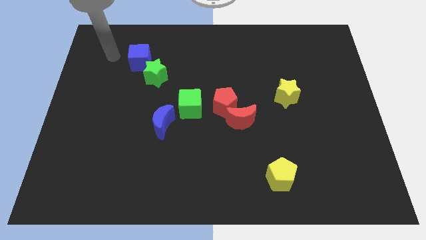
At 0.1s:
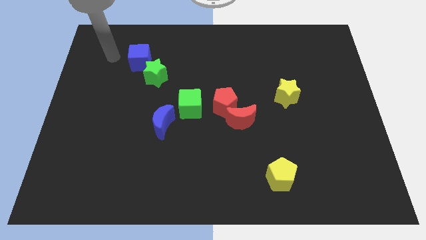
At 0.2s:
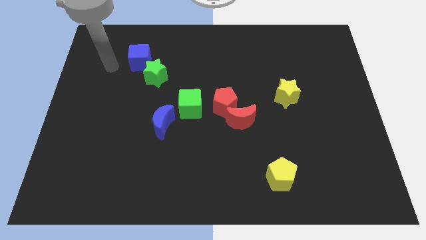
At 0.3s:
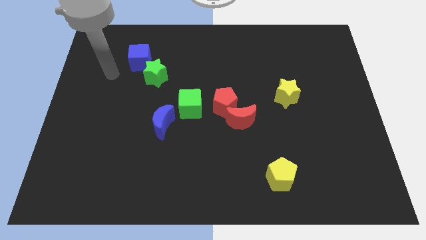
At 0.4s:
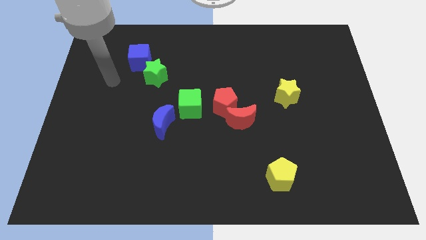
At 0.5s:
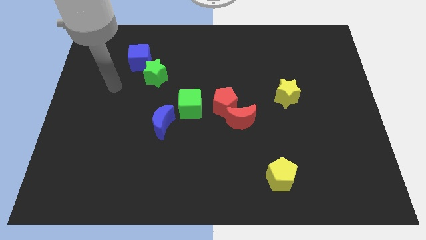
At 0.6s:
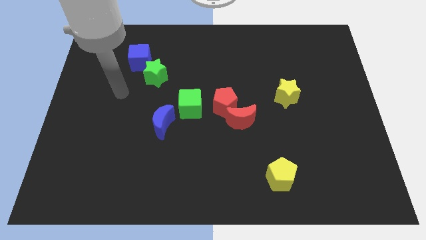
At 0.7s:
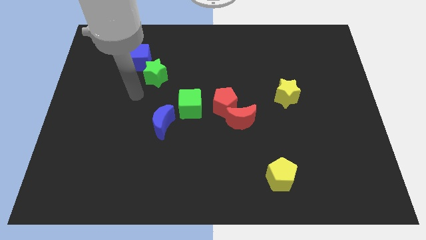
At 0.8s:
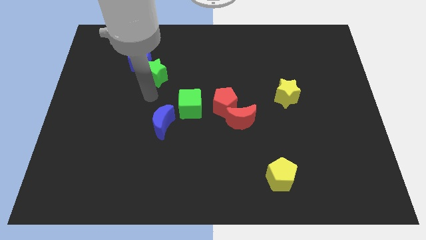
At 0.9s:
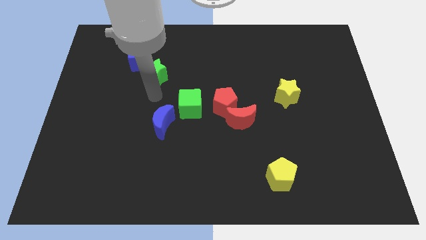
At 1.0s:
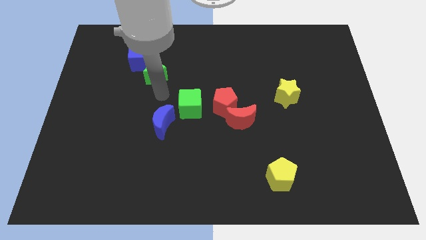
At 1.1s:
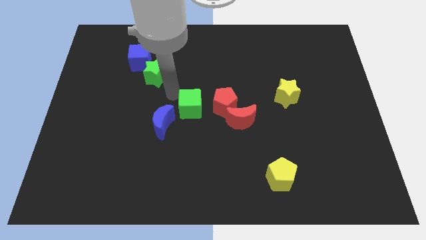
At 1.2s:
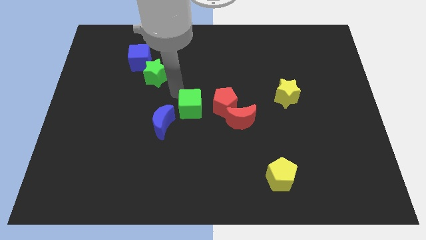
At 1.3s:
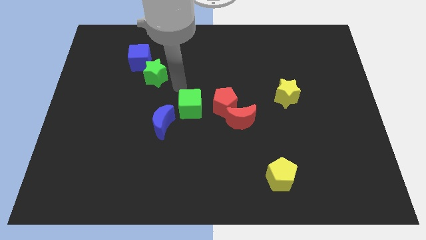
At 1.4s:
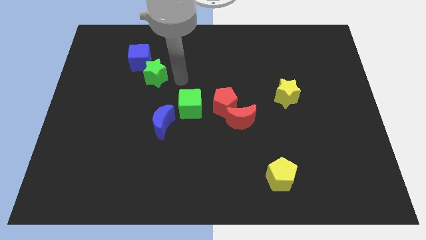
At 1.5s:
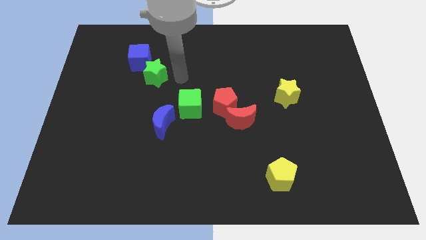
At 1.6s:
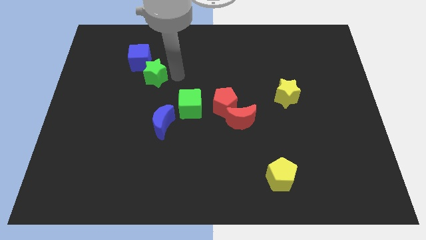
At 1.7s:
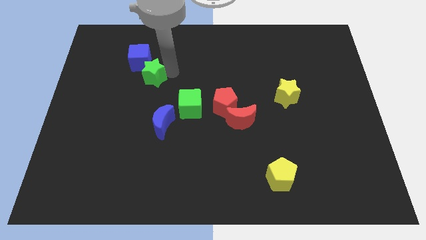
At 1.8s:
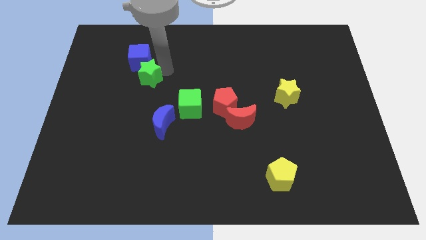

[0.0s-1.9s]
touch the green star

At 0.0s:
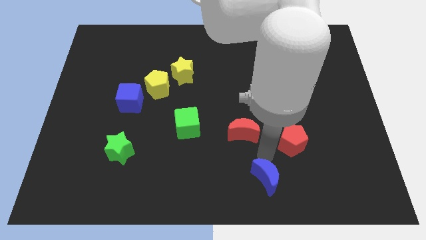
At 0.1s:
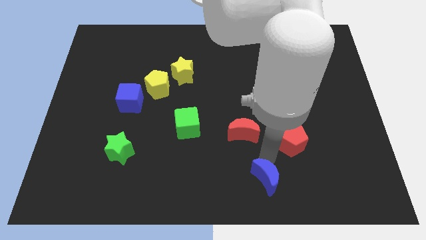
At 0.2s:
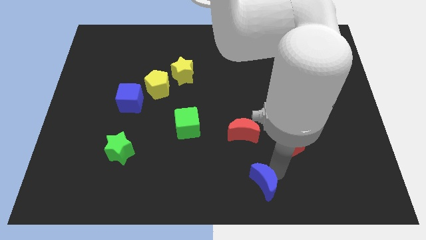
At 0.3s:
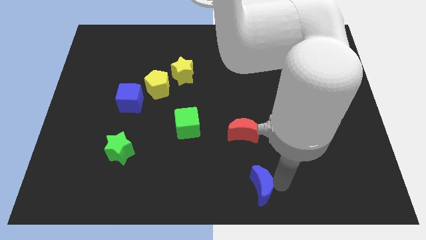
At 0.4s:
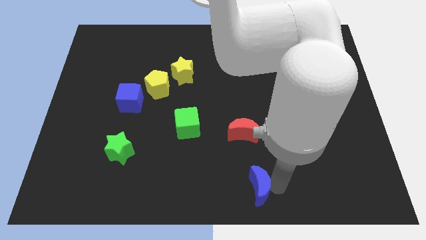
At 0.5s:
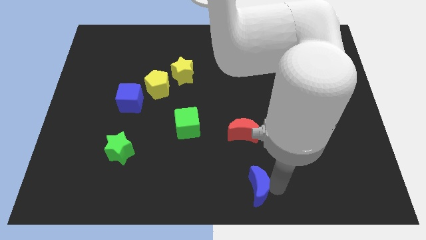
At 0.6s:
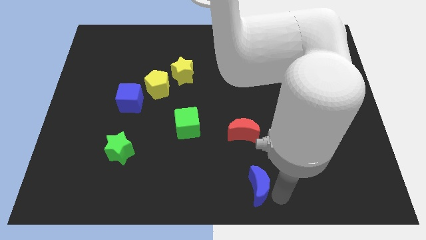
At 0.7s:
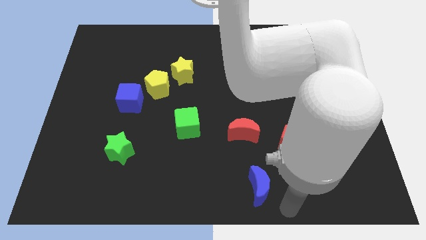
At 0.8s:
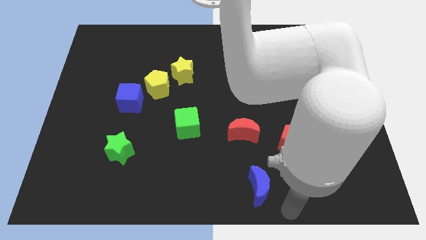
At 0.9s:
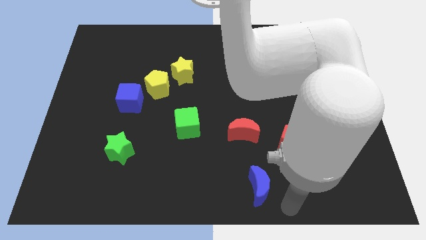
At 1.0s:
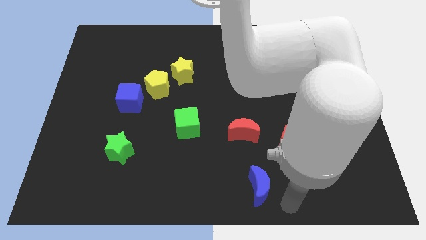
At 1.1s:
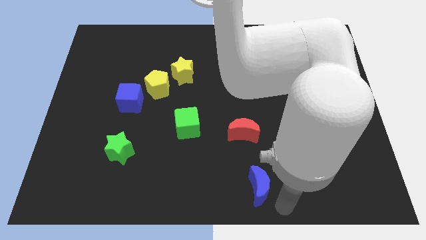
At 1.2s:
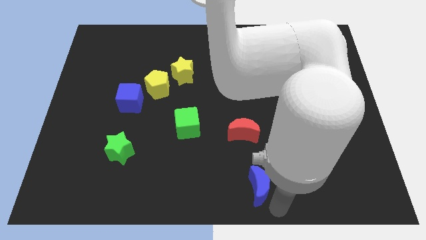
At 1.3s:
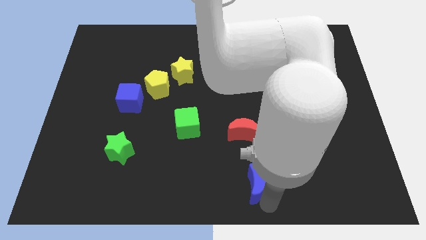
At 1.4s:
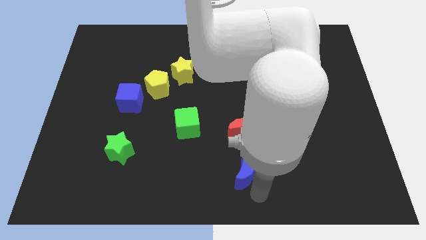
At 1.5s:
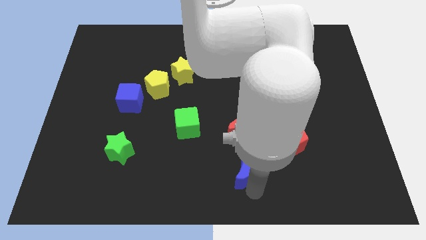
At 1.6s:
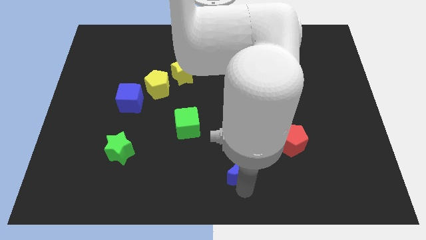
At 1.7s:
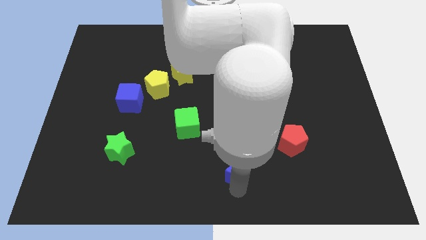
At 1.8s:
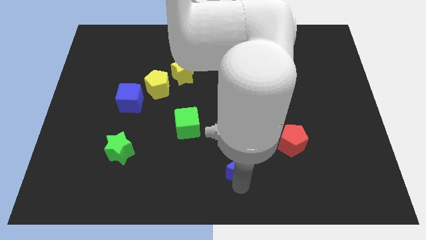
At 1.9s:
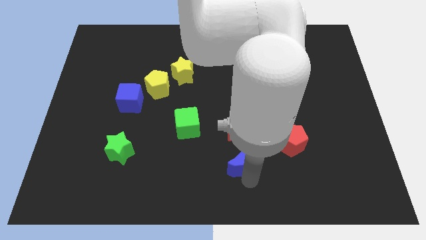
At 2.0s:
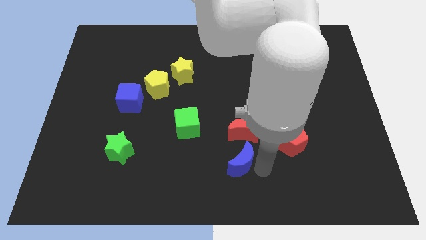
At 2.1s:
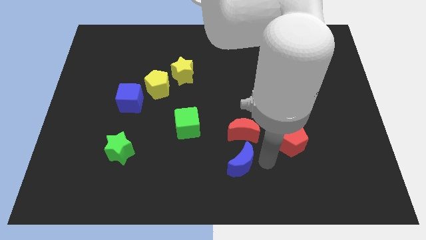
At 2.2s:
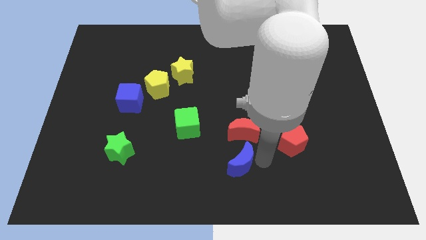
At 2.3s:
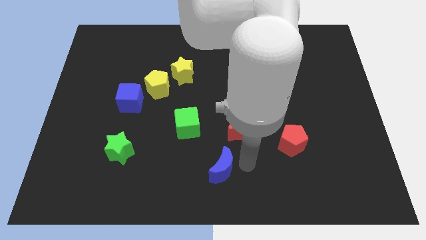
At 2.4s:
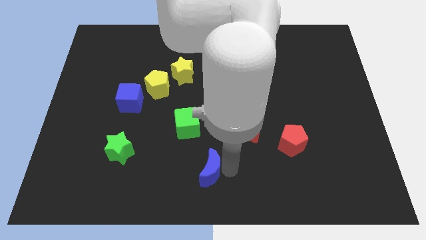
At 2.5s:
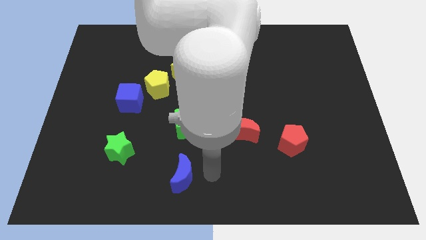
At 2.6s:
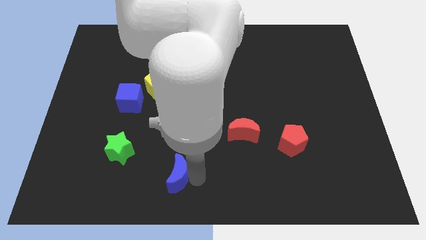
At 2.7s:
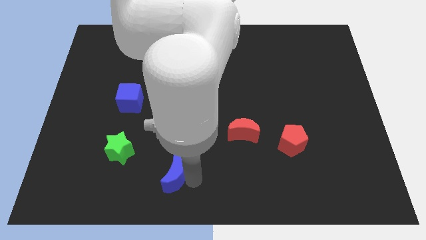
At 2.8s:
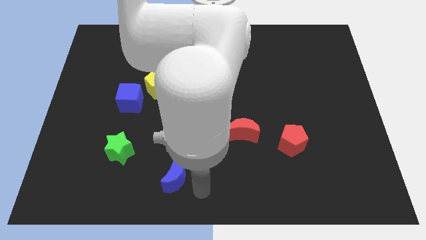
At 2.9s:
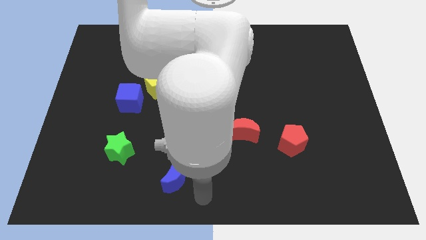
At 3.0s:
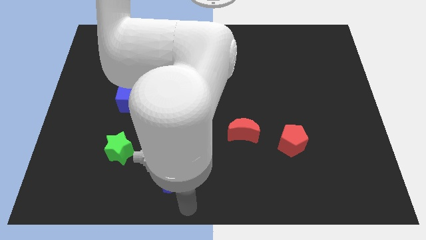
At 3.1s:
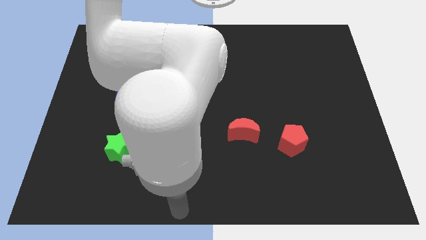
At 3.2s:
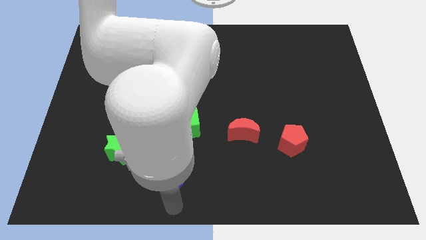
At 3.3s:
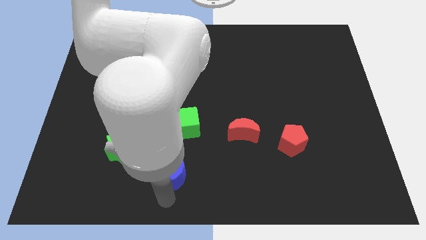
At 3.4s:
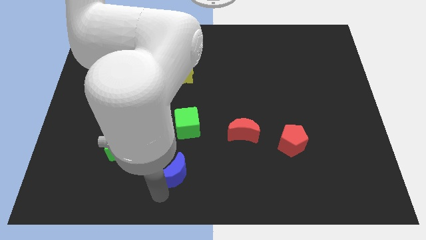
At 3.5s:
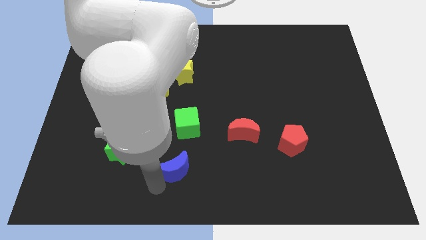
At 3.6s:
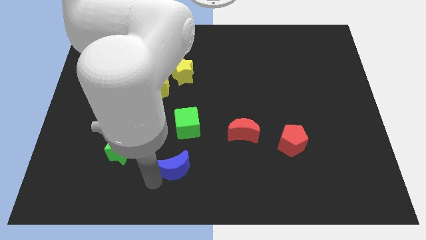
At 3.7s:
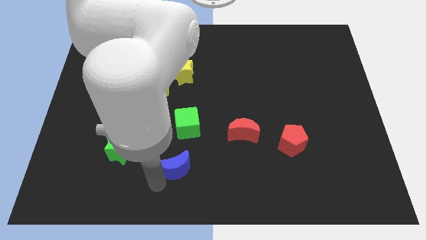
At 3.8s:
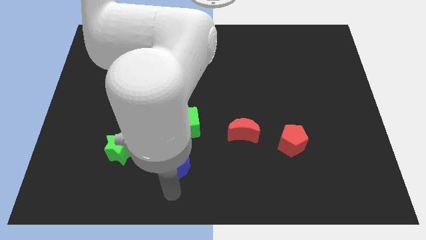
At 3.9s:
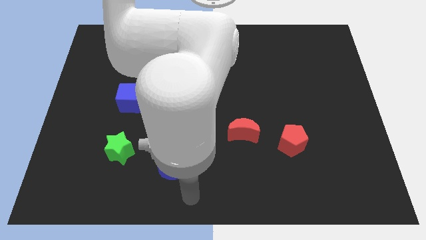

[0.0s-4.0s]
push the blue crescent to the bottom of the green cube

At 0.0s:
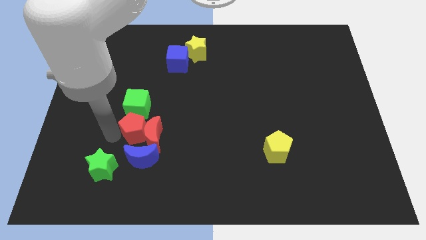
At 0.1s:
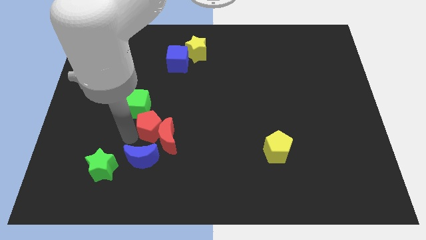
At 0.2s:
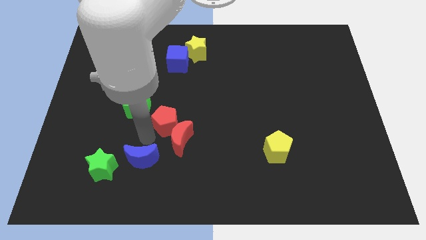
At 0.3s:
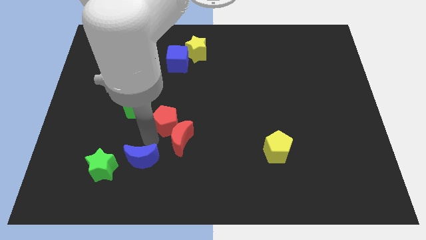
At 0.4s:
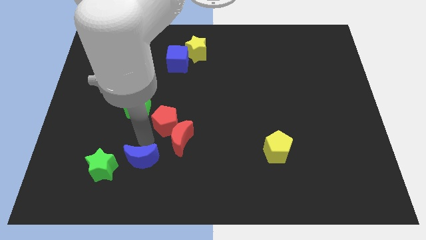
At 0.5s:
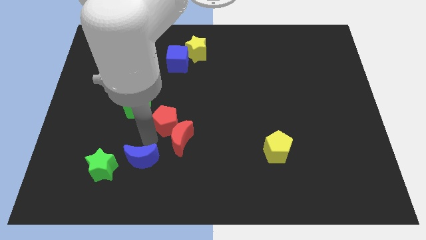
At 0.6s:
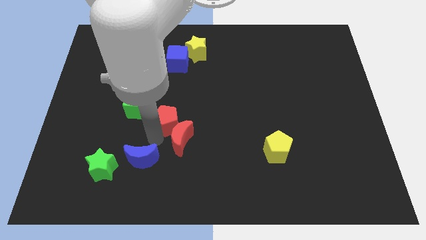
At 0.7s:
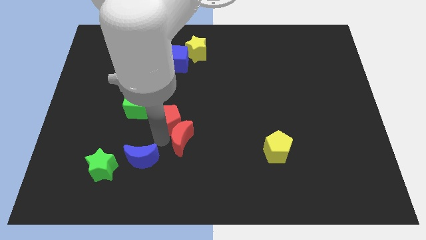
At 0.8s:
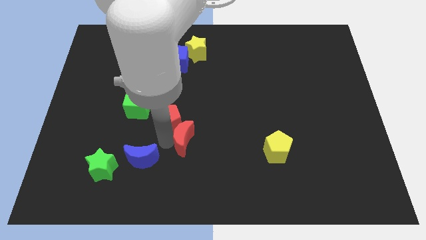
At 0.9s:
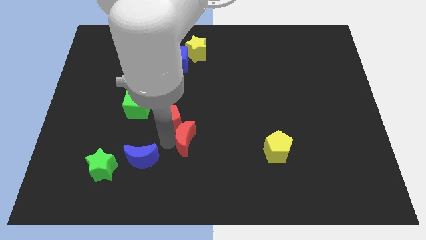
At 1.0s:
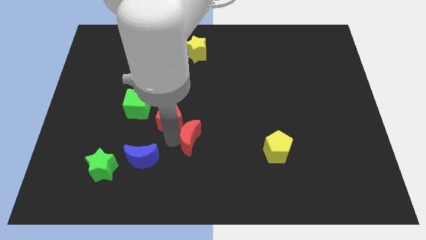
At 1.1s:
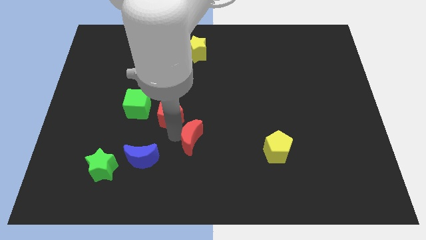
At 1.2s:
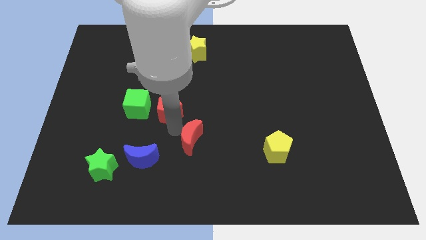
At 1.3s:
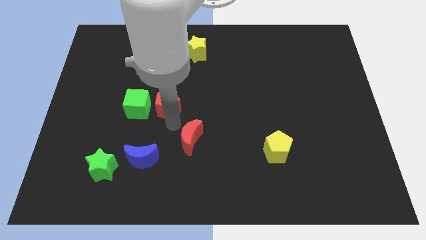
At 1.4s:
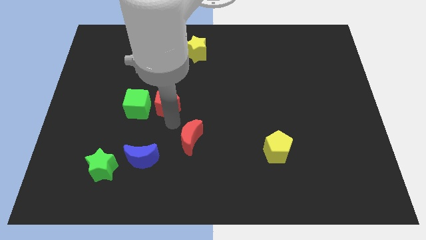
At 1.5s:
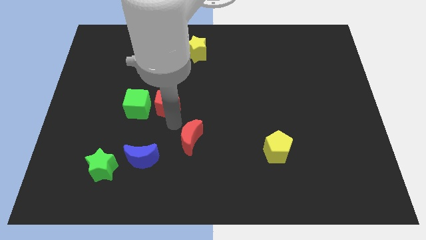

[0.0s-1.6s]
move the red pentagon to the right side of the green cube

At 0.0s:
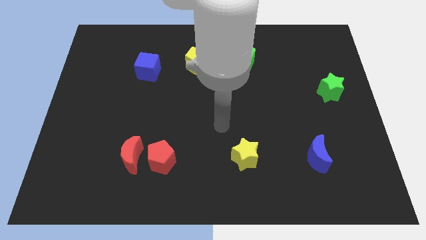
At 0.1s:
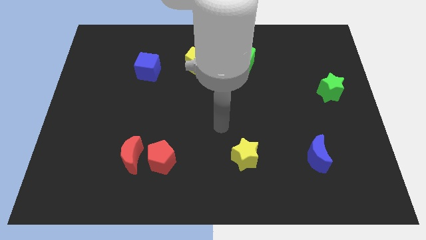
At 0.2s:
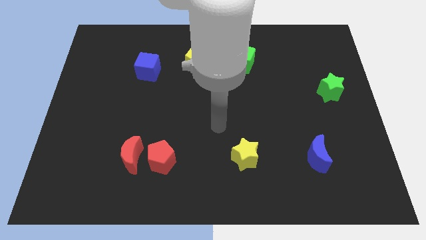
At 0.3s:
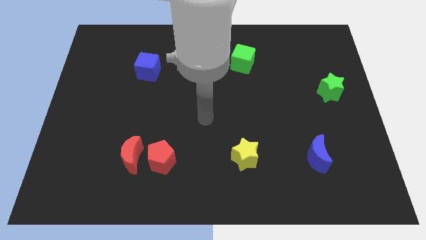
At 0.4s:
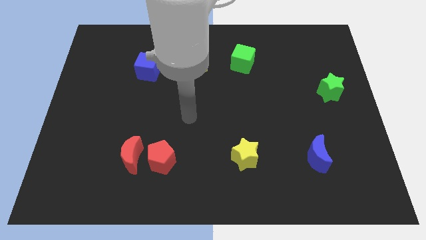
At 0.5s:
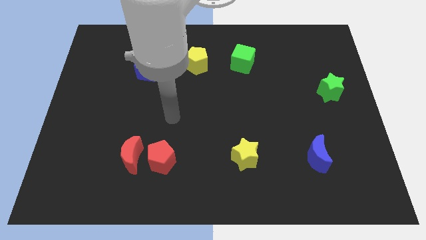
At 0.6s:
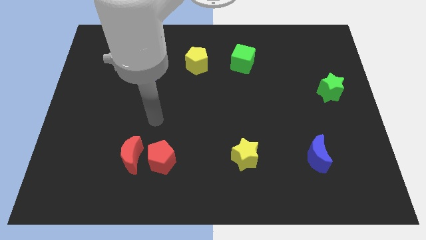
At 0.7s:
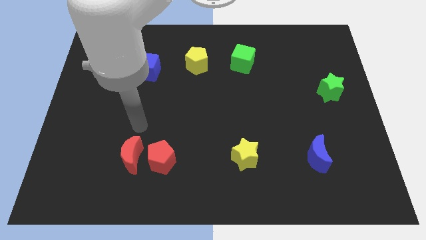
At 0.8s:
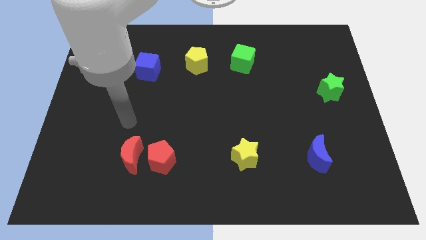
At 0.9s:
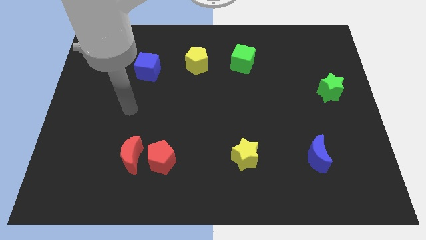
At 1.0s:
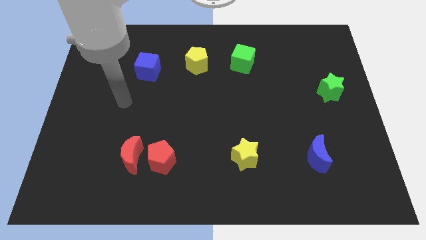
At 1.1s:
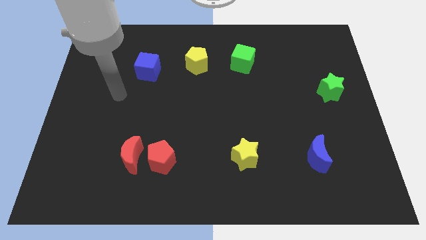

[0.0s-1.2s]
move your hand towards left

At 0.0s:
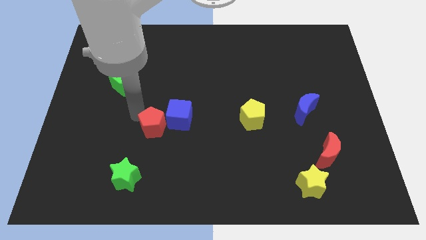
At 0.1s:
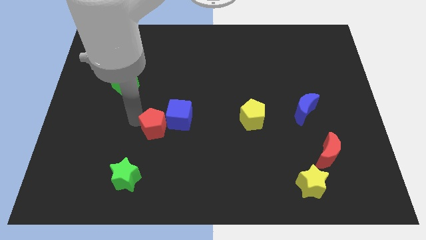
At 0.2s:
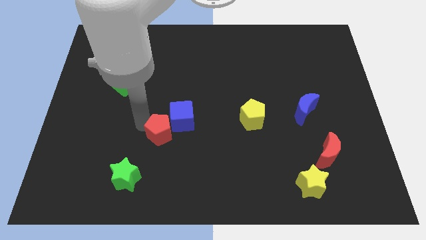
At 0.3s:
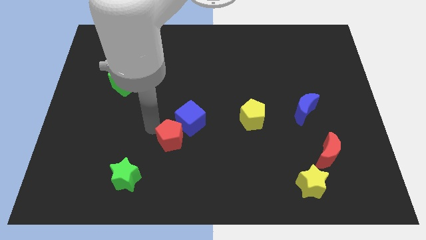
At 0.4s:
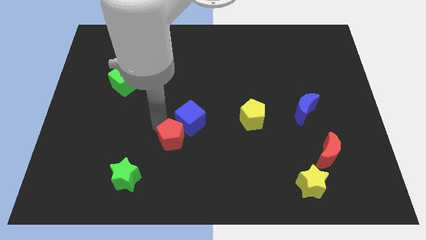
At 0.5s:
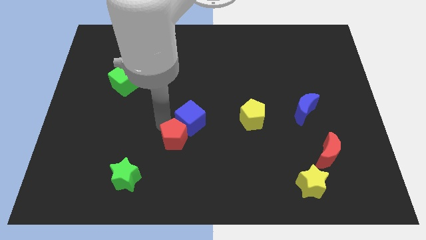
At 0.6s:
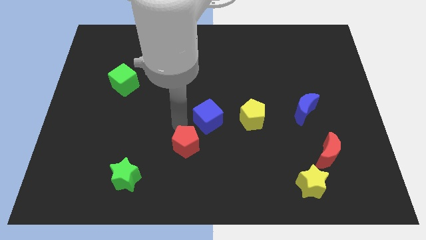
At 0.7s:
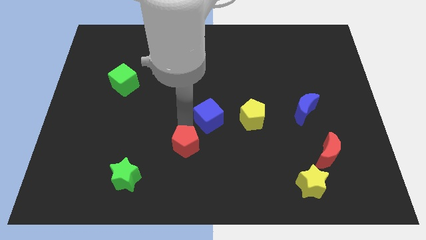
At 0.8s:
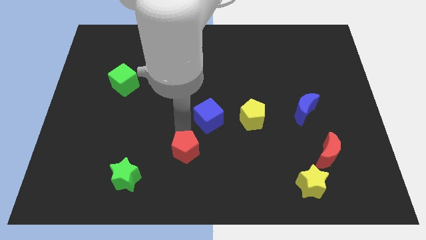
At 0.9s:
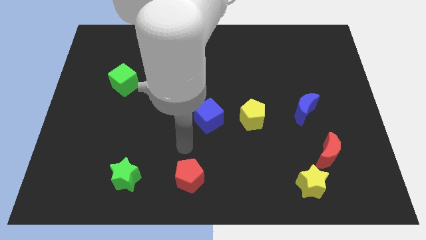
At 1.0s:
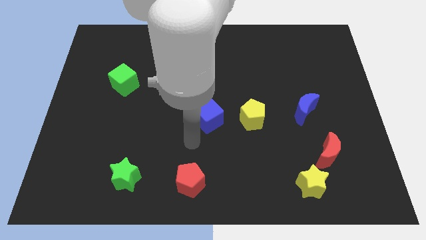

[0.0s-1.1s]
push the red pentagon towards the bottom middle of the board
